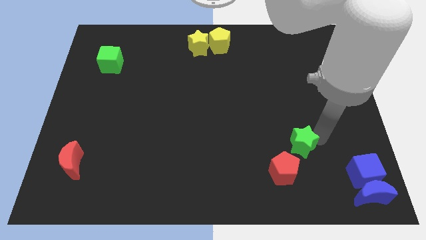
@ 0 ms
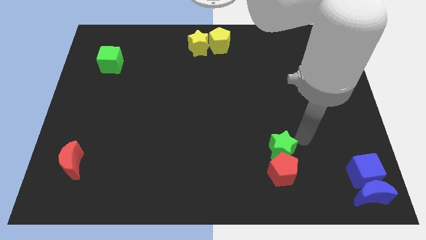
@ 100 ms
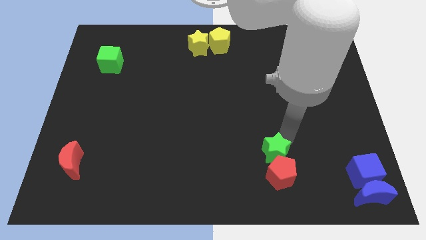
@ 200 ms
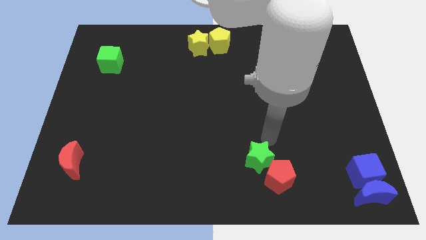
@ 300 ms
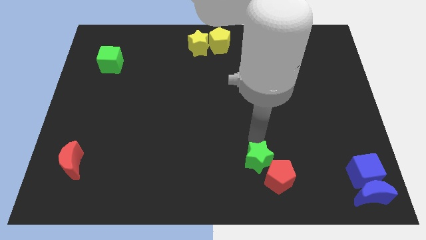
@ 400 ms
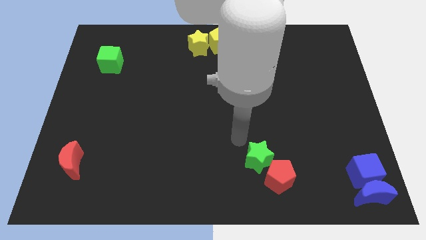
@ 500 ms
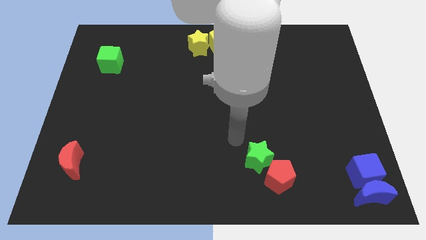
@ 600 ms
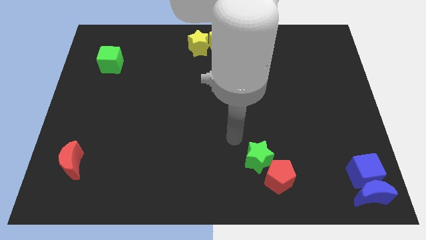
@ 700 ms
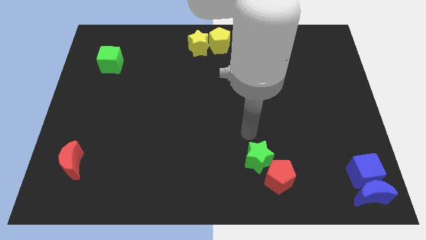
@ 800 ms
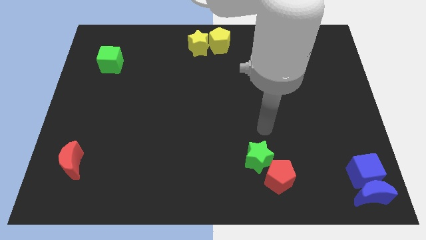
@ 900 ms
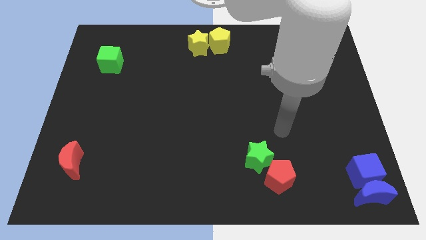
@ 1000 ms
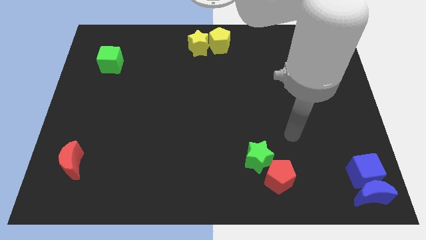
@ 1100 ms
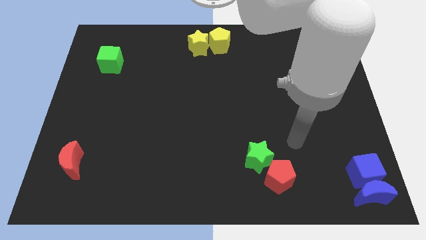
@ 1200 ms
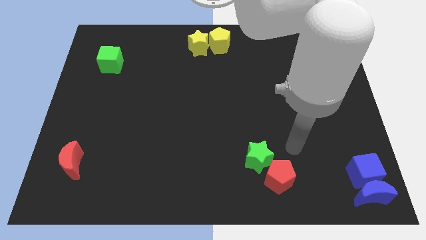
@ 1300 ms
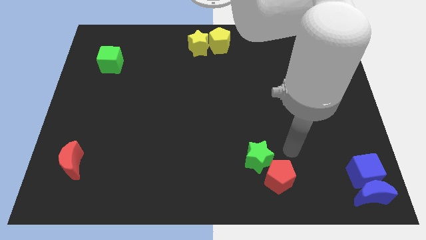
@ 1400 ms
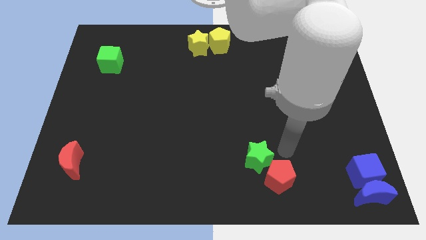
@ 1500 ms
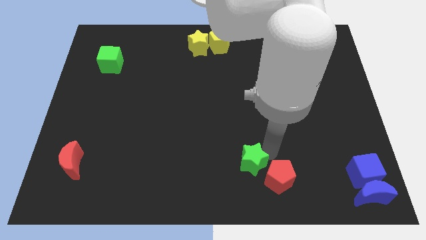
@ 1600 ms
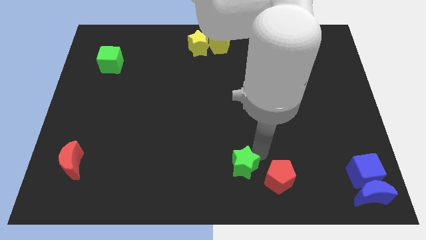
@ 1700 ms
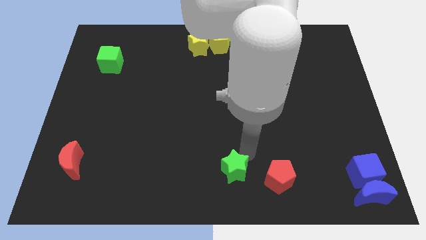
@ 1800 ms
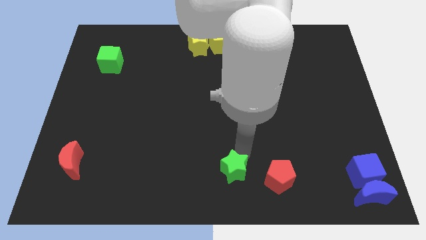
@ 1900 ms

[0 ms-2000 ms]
place green star to the left of red pentagon

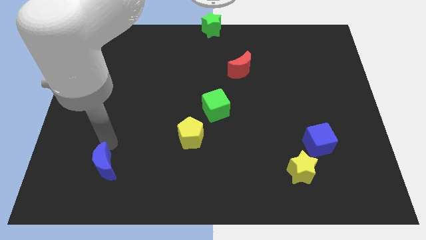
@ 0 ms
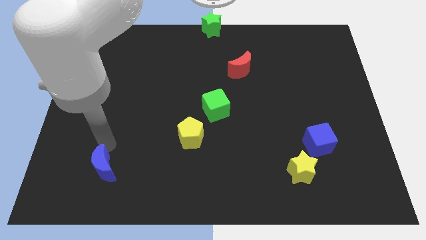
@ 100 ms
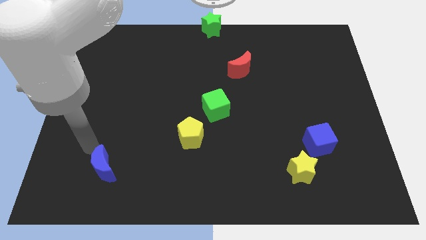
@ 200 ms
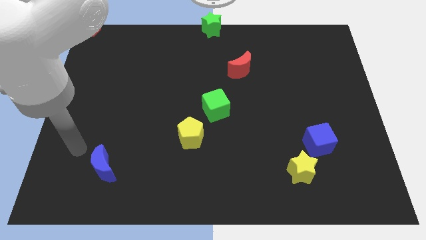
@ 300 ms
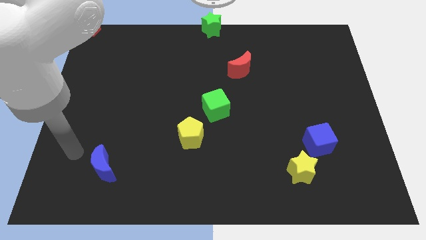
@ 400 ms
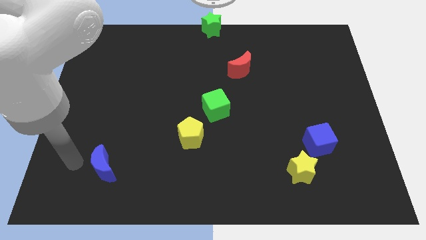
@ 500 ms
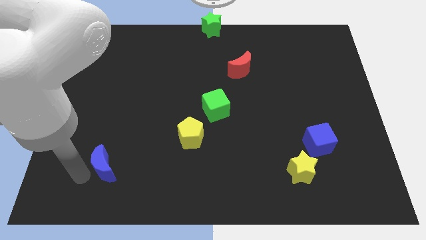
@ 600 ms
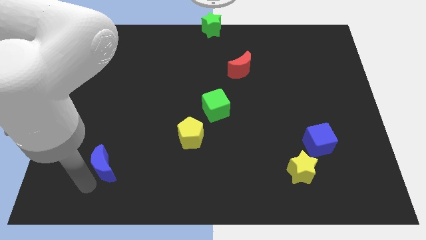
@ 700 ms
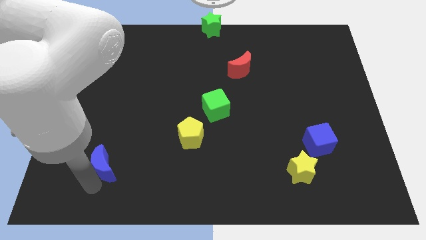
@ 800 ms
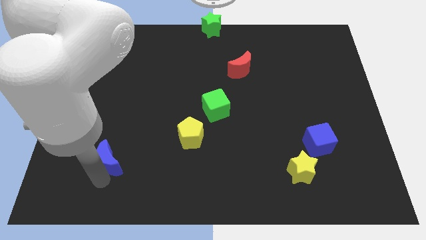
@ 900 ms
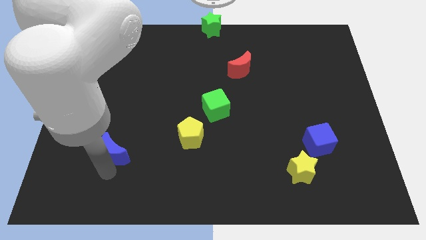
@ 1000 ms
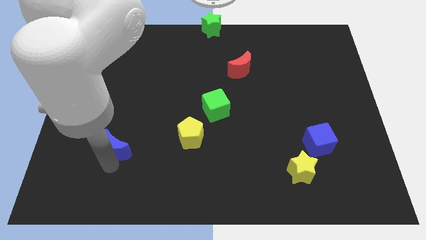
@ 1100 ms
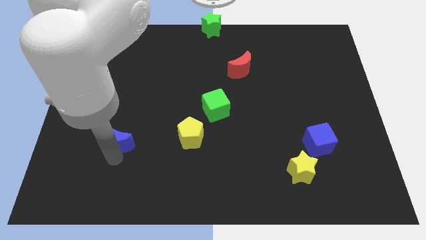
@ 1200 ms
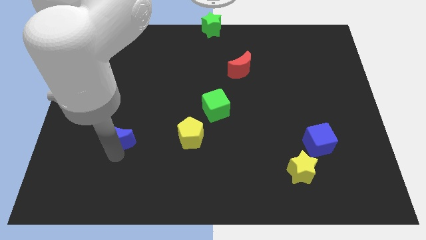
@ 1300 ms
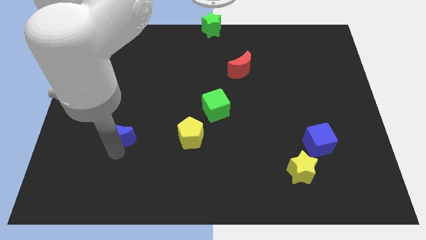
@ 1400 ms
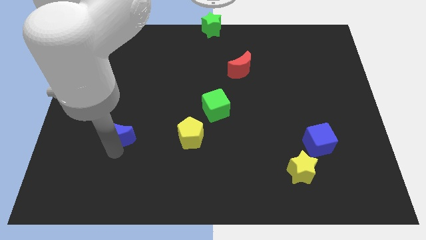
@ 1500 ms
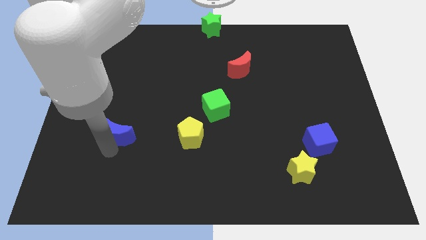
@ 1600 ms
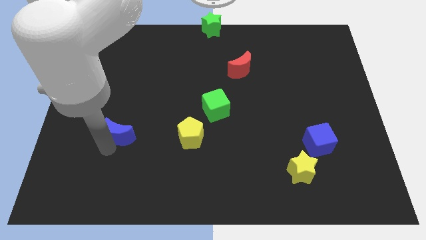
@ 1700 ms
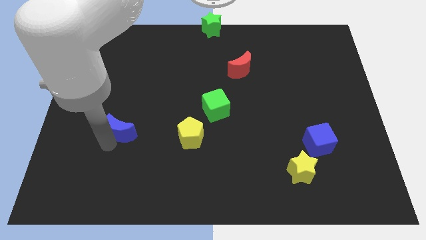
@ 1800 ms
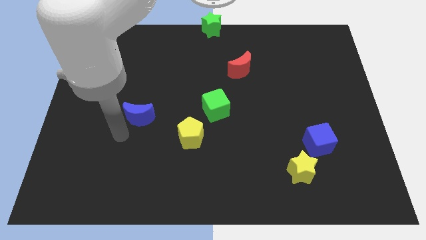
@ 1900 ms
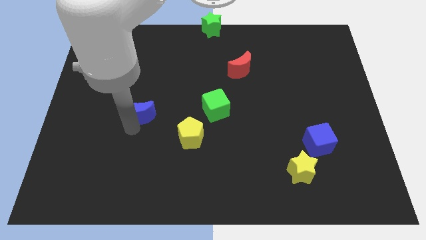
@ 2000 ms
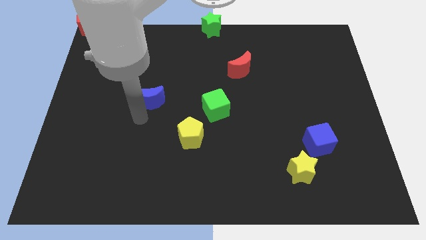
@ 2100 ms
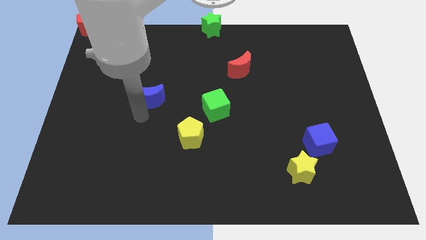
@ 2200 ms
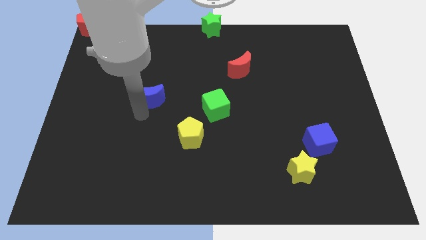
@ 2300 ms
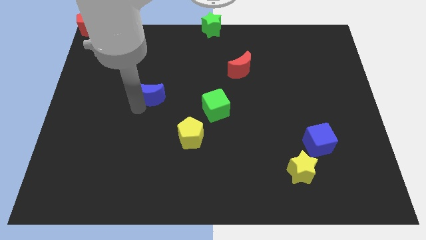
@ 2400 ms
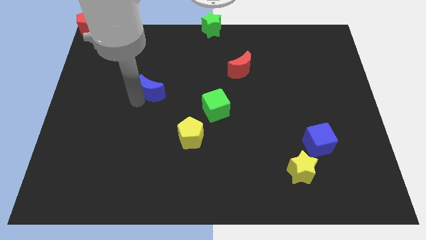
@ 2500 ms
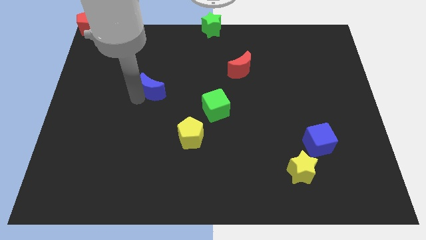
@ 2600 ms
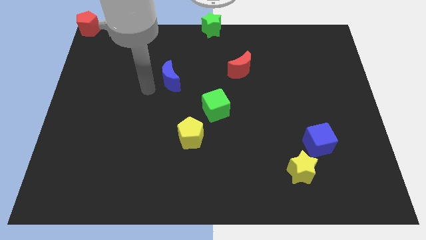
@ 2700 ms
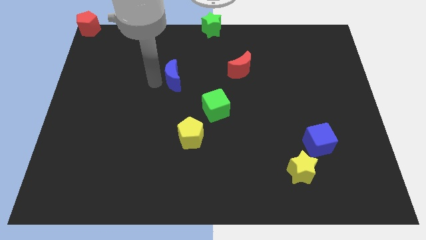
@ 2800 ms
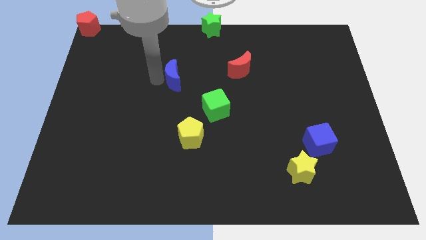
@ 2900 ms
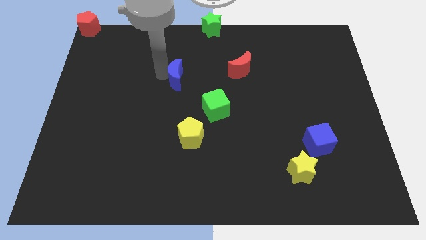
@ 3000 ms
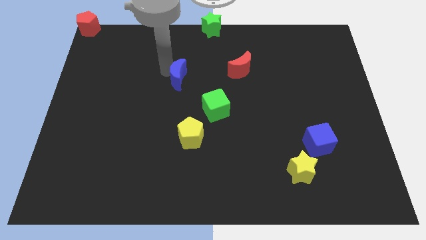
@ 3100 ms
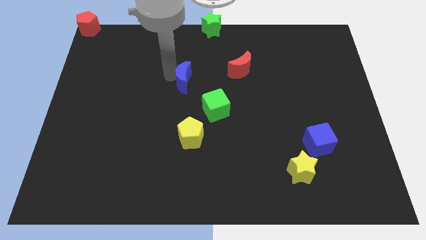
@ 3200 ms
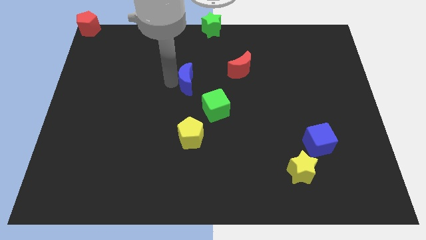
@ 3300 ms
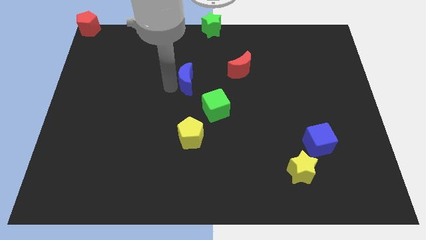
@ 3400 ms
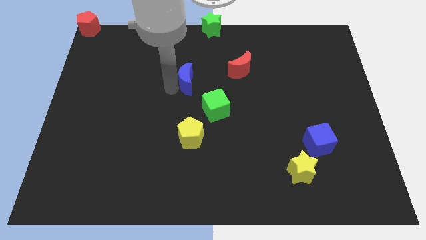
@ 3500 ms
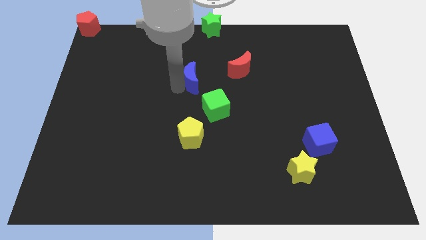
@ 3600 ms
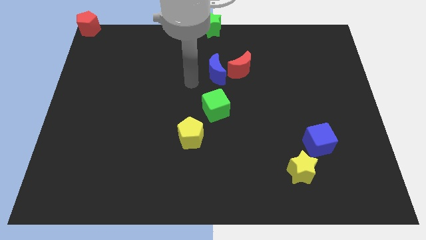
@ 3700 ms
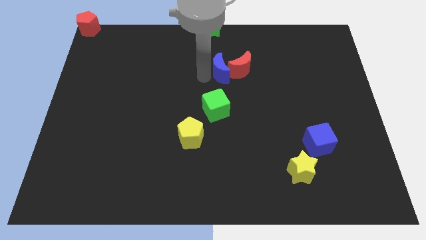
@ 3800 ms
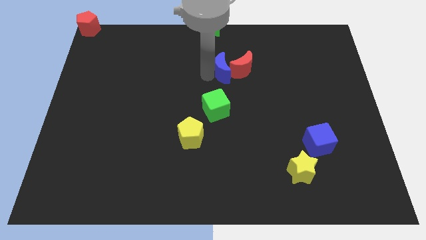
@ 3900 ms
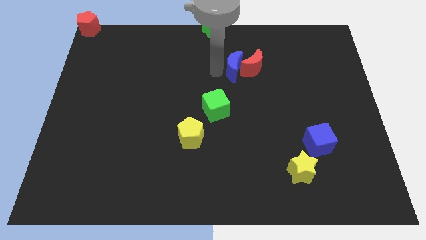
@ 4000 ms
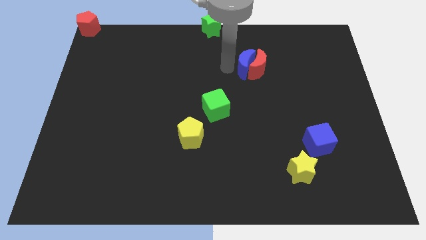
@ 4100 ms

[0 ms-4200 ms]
place the blue crescent near the red crescent

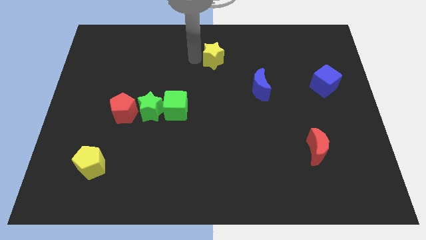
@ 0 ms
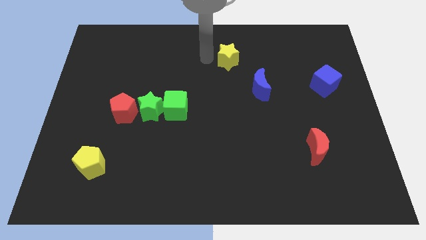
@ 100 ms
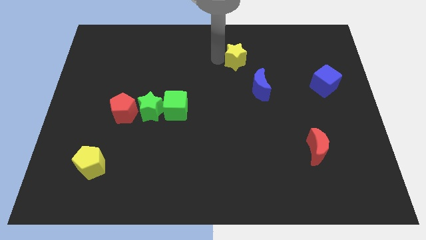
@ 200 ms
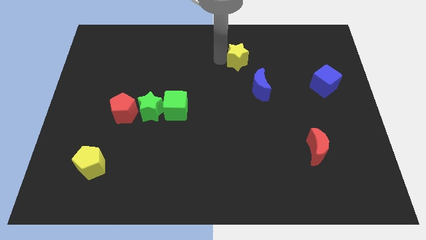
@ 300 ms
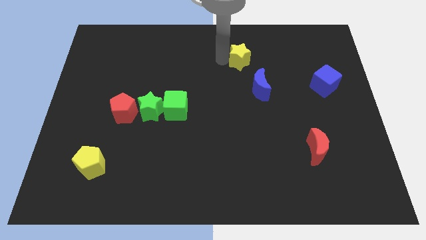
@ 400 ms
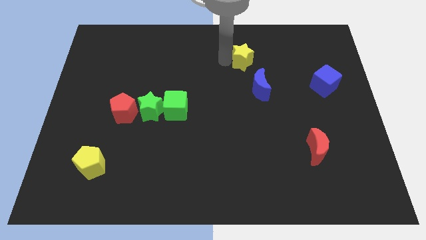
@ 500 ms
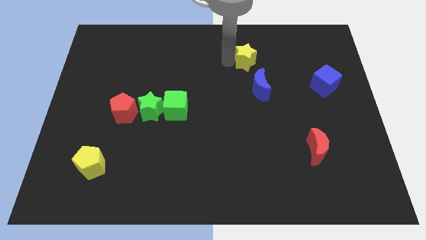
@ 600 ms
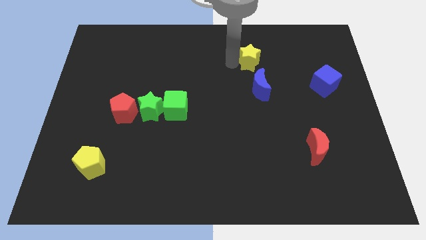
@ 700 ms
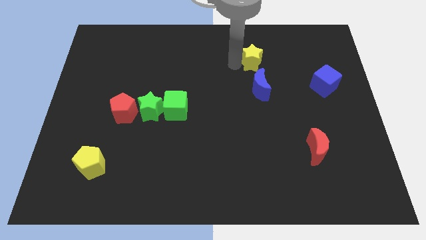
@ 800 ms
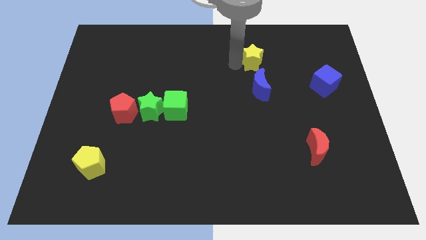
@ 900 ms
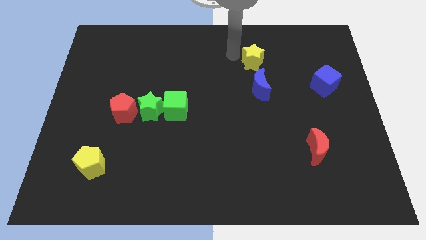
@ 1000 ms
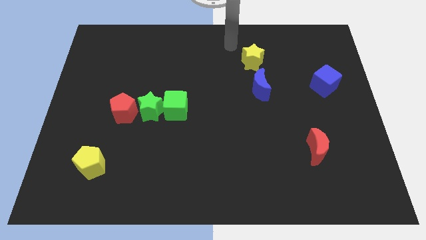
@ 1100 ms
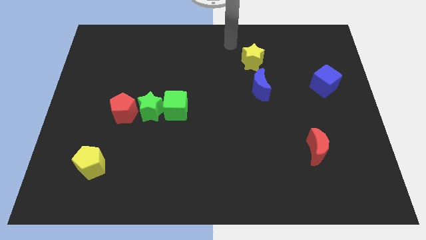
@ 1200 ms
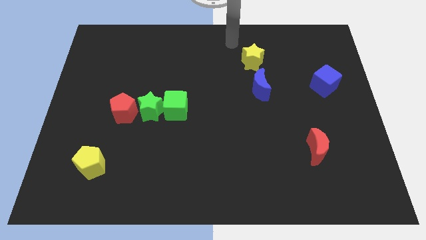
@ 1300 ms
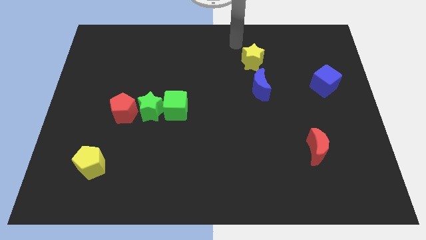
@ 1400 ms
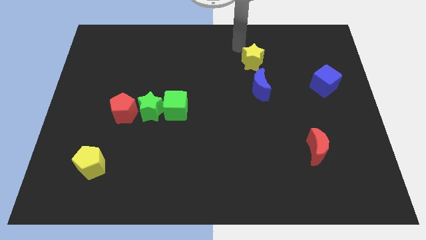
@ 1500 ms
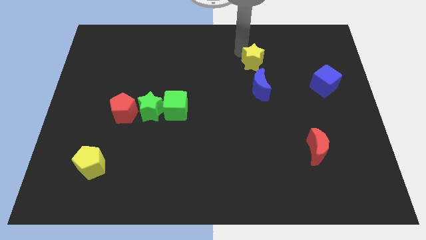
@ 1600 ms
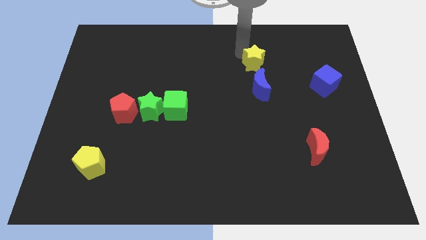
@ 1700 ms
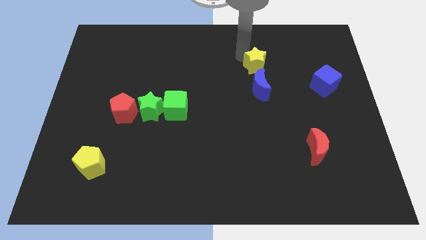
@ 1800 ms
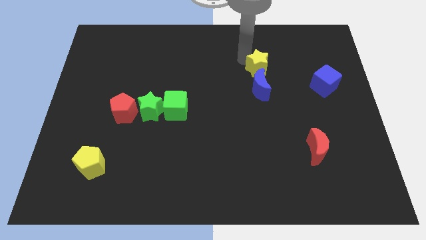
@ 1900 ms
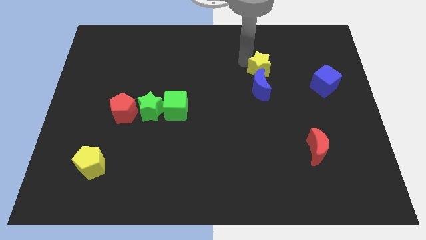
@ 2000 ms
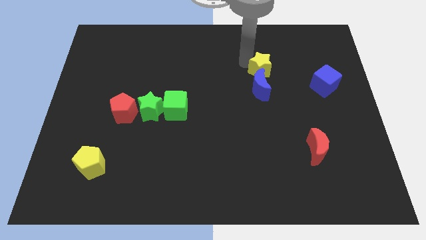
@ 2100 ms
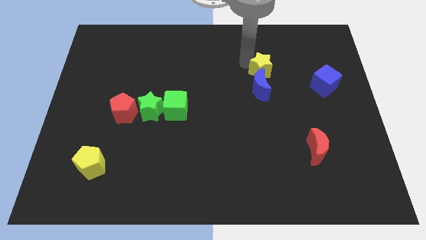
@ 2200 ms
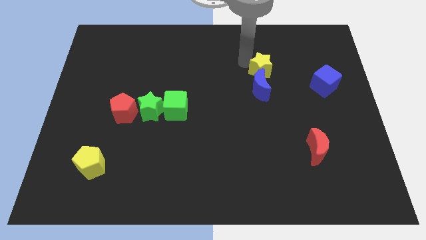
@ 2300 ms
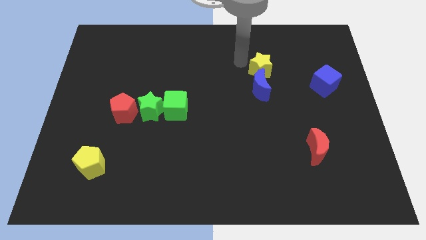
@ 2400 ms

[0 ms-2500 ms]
make the yellow star touch the top of the blue crescent

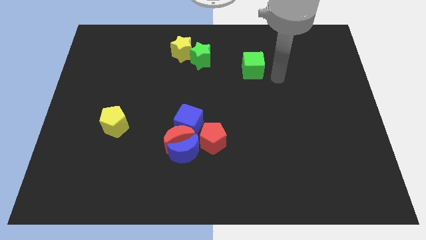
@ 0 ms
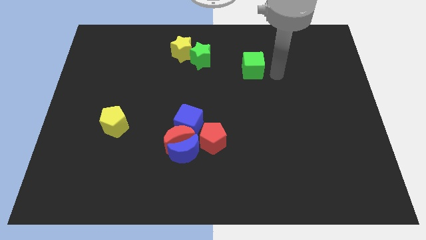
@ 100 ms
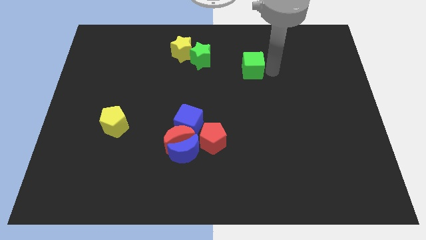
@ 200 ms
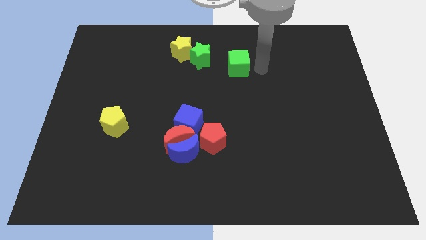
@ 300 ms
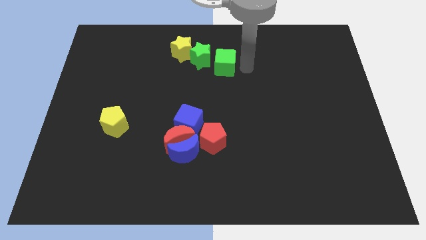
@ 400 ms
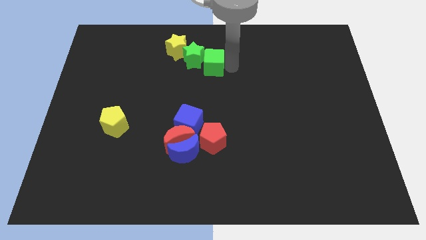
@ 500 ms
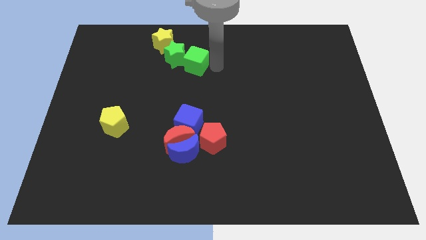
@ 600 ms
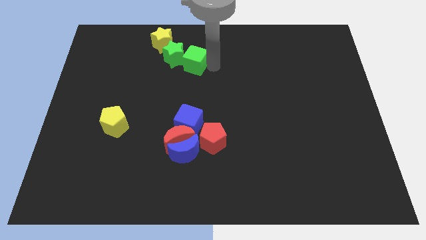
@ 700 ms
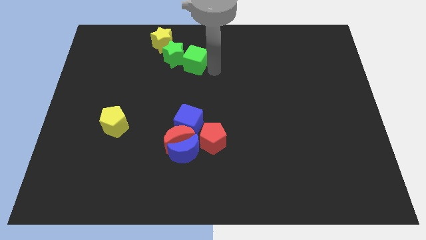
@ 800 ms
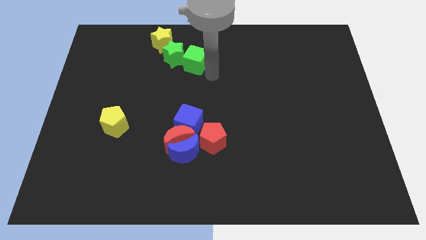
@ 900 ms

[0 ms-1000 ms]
slide the green cube into the green star
